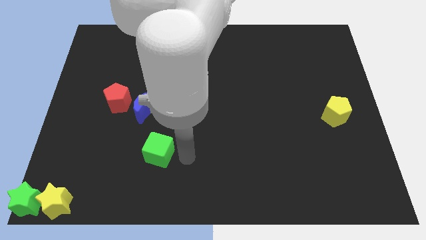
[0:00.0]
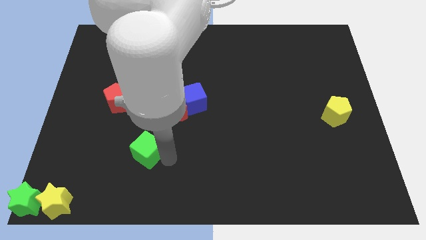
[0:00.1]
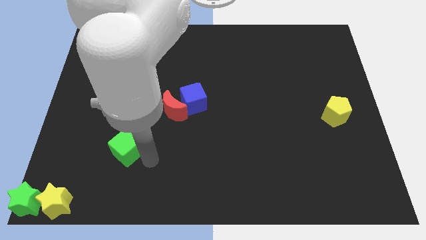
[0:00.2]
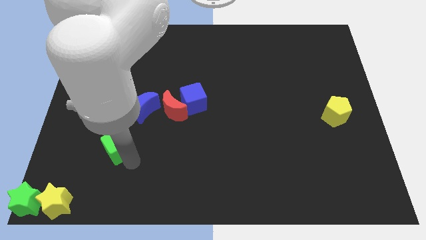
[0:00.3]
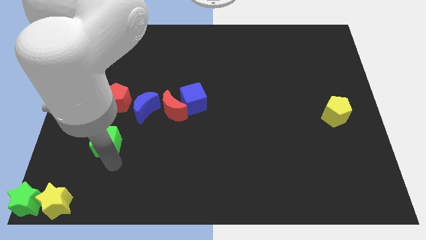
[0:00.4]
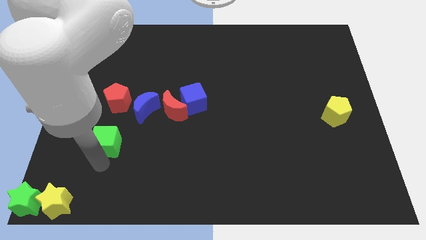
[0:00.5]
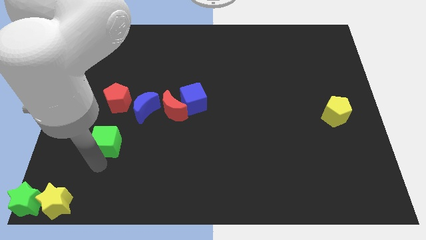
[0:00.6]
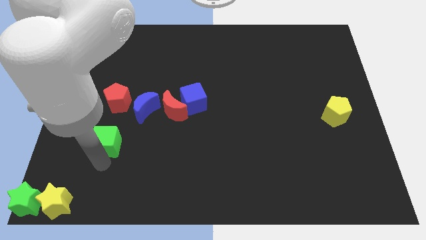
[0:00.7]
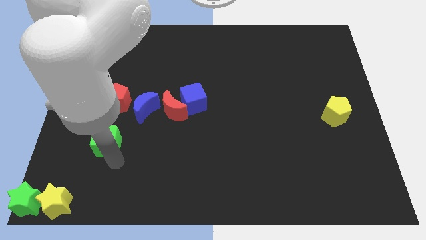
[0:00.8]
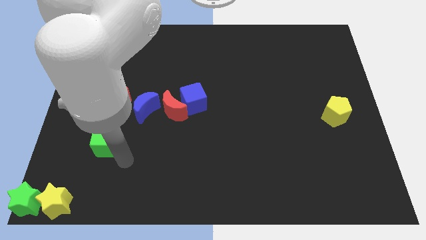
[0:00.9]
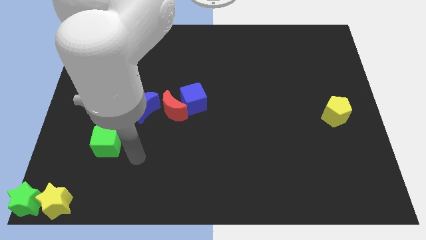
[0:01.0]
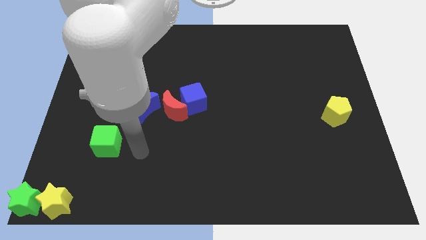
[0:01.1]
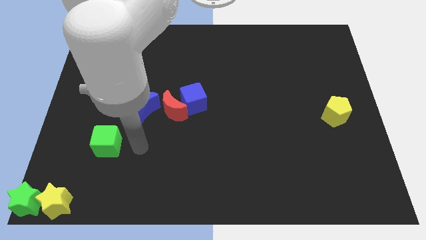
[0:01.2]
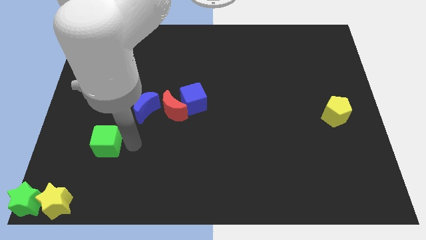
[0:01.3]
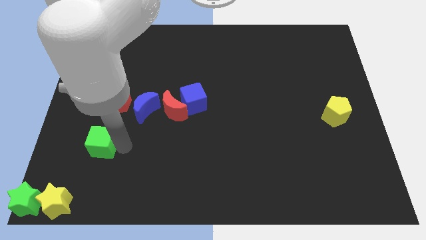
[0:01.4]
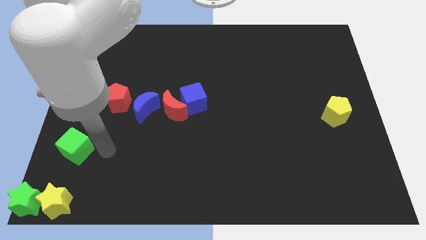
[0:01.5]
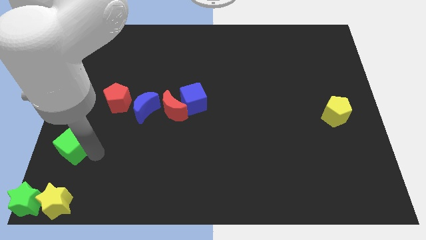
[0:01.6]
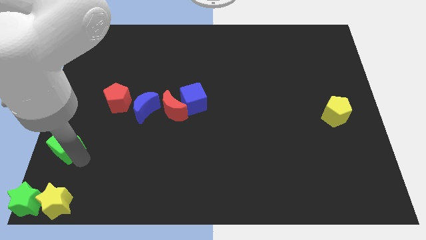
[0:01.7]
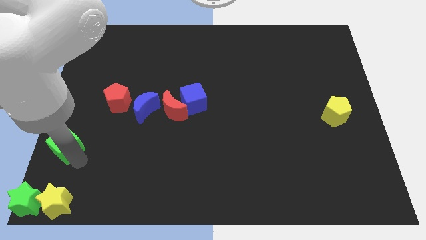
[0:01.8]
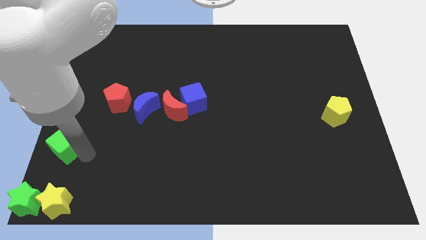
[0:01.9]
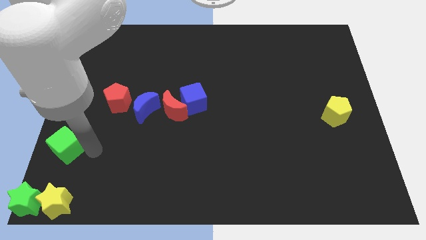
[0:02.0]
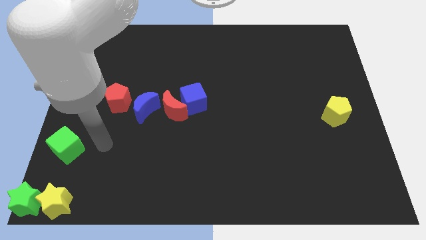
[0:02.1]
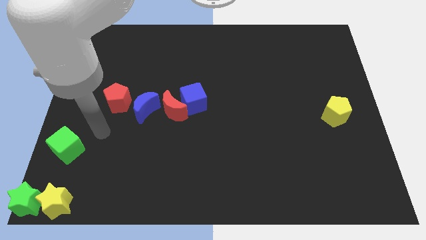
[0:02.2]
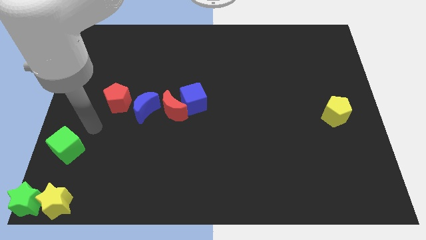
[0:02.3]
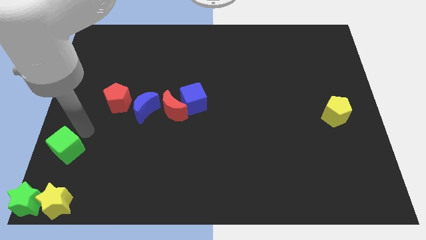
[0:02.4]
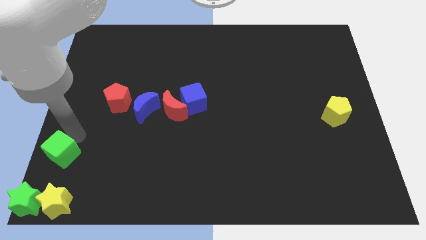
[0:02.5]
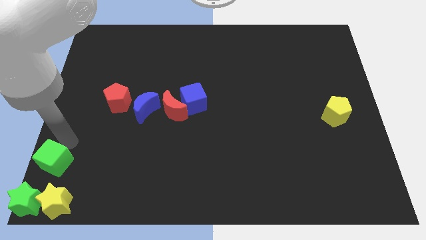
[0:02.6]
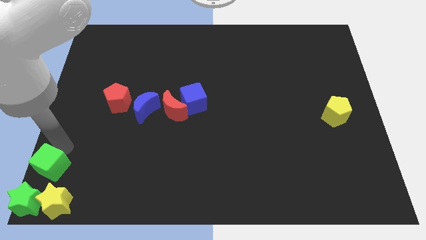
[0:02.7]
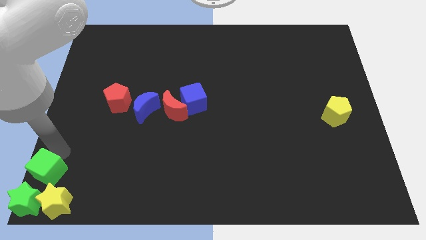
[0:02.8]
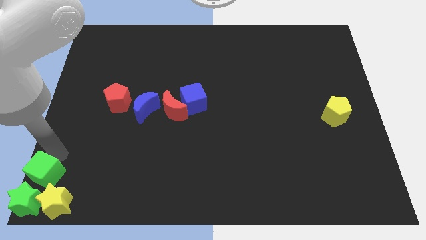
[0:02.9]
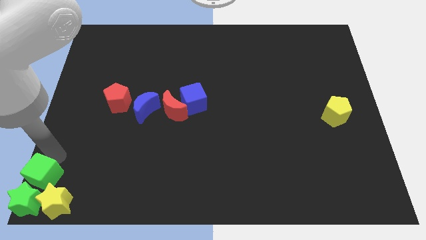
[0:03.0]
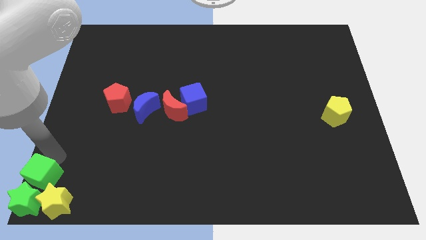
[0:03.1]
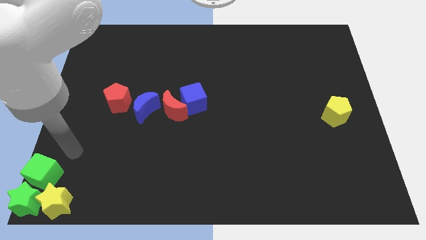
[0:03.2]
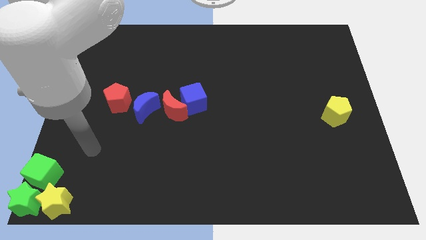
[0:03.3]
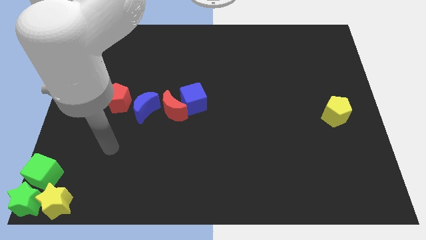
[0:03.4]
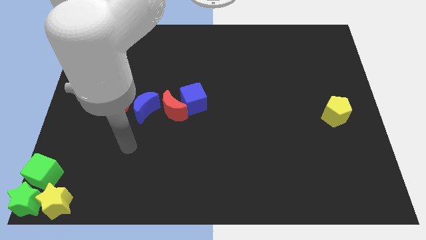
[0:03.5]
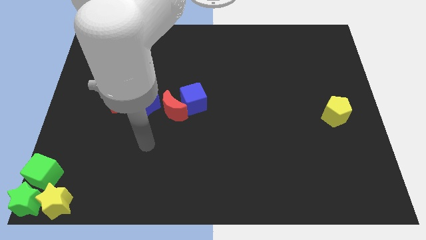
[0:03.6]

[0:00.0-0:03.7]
place the green cube above the green star

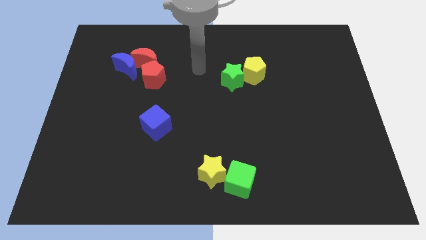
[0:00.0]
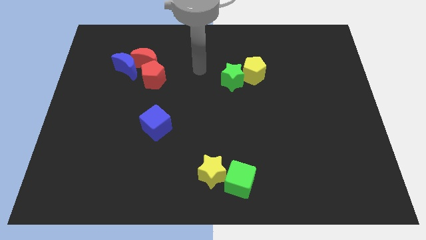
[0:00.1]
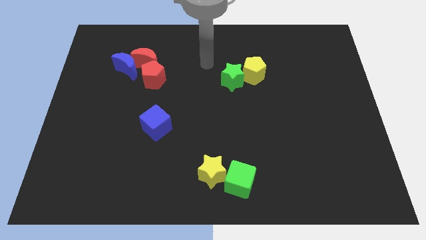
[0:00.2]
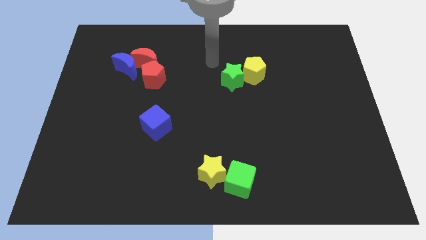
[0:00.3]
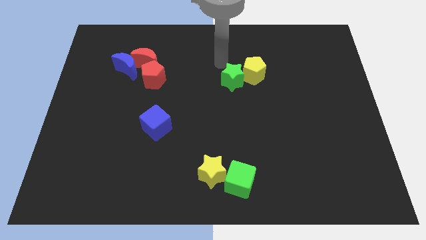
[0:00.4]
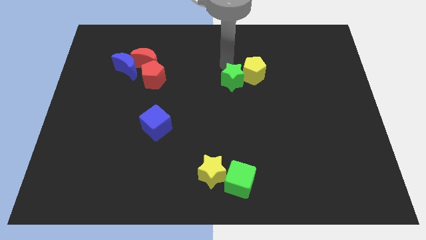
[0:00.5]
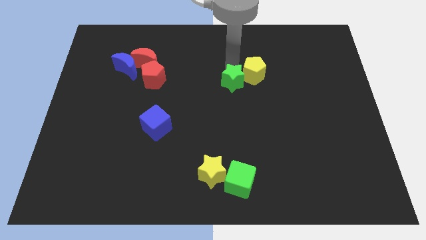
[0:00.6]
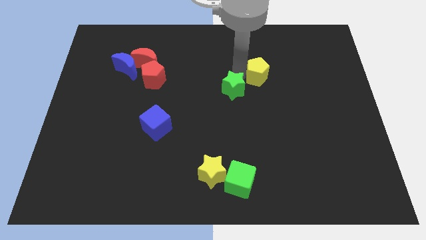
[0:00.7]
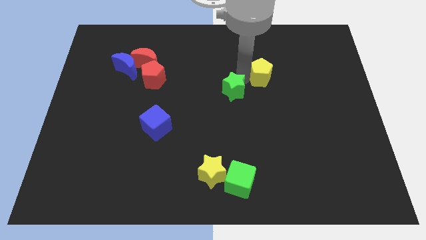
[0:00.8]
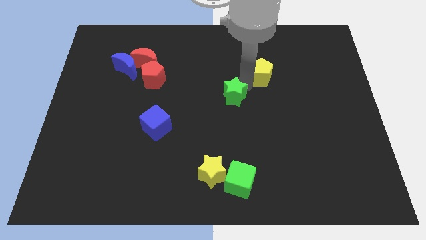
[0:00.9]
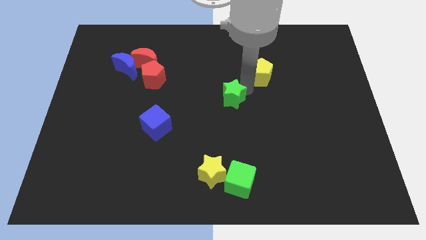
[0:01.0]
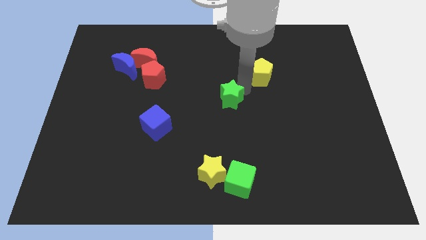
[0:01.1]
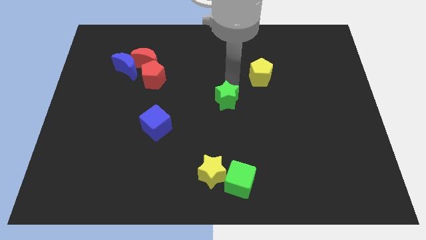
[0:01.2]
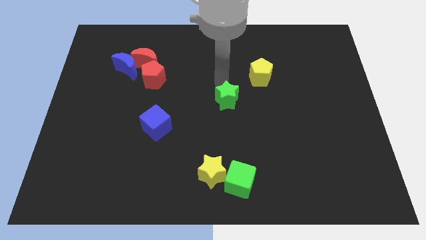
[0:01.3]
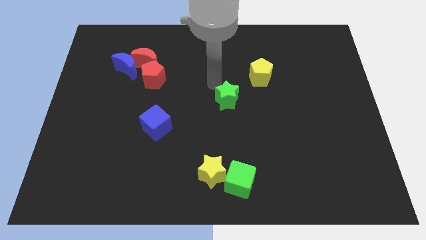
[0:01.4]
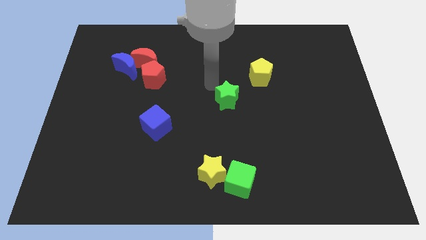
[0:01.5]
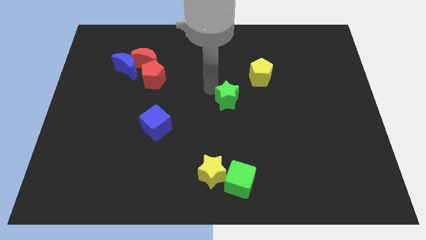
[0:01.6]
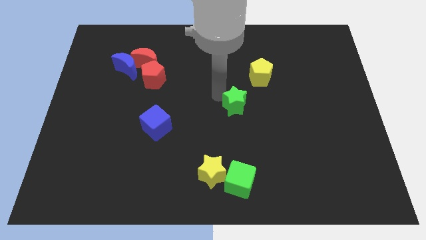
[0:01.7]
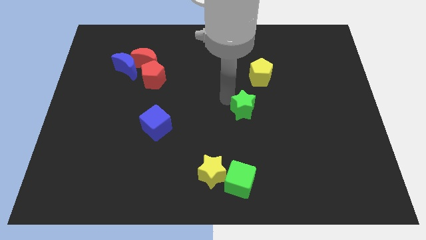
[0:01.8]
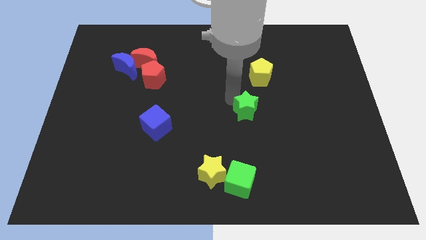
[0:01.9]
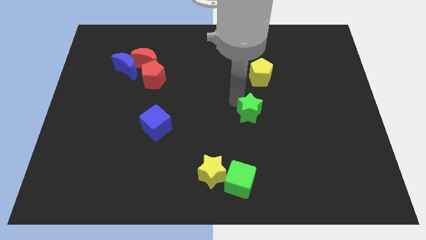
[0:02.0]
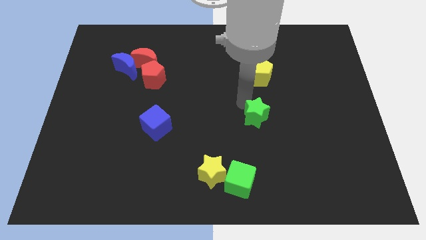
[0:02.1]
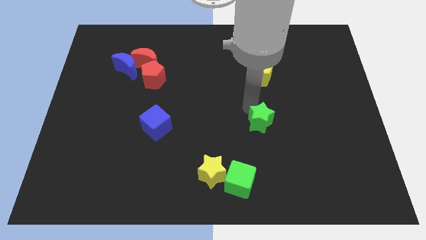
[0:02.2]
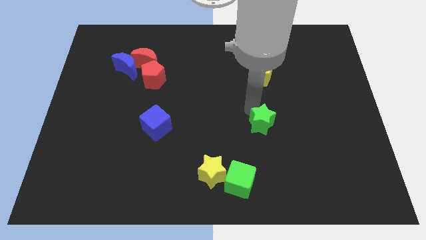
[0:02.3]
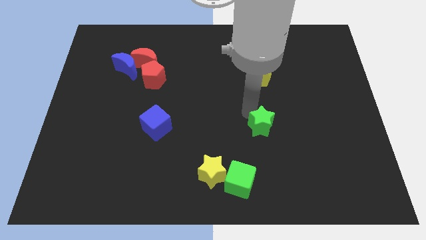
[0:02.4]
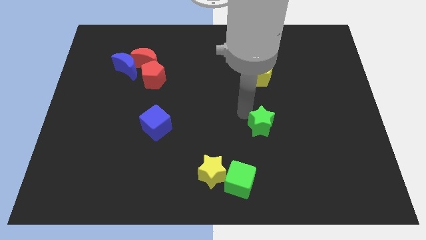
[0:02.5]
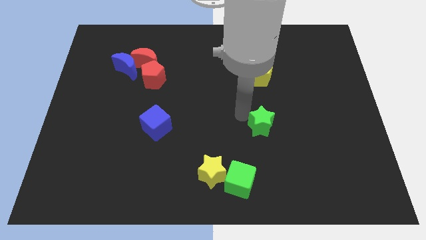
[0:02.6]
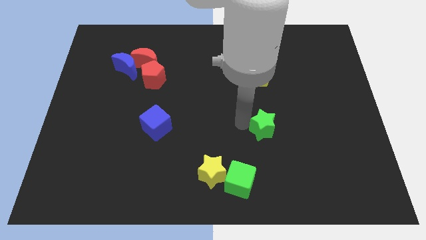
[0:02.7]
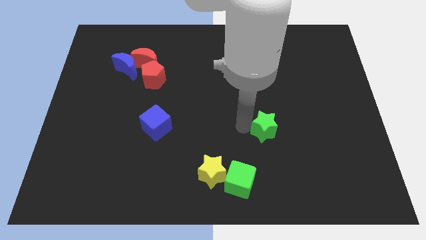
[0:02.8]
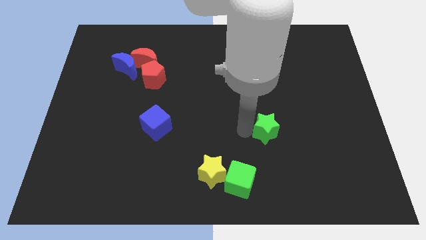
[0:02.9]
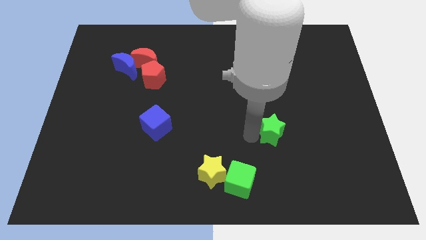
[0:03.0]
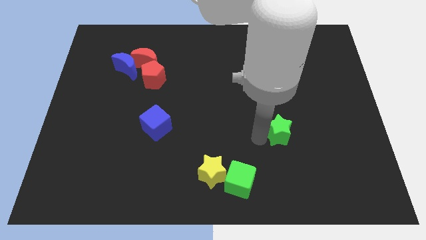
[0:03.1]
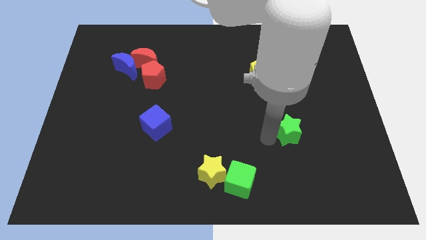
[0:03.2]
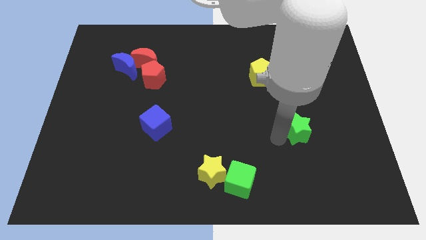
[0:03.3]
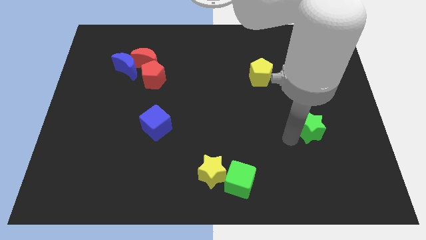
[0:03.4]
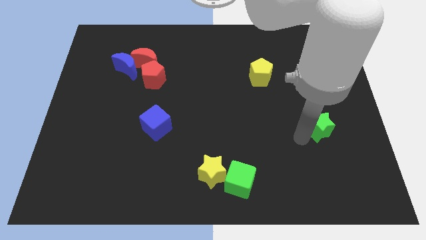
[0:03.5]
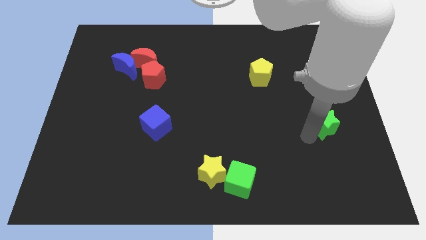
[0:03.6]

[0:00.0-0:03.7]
move the green star diagonal to the yellow pentagon

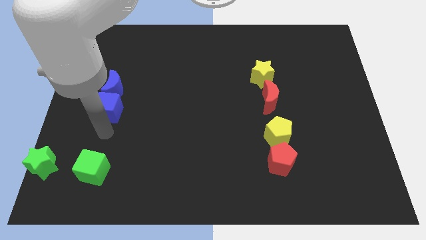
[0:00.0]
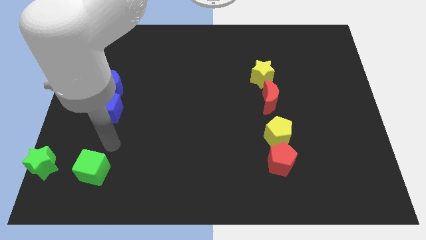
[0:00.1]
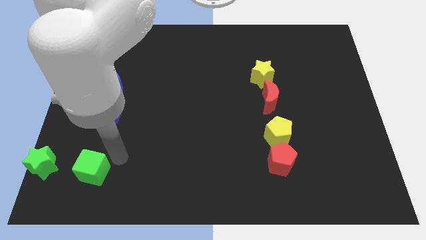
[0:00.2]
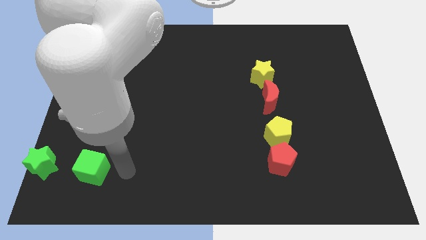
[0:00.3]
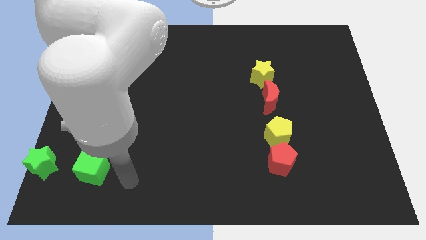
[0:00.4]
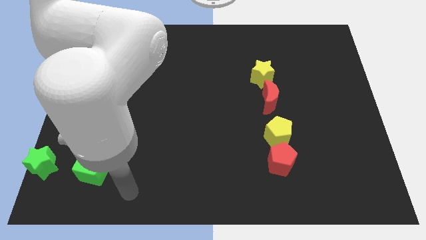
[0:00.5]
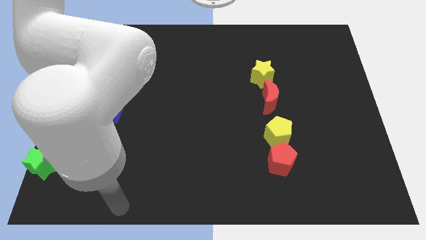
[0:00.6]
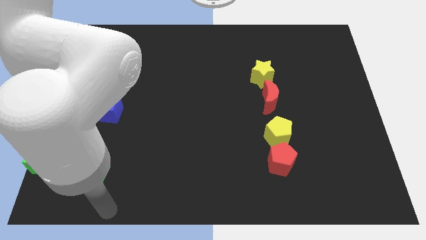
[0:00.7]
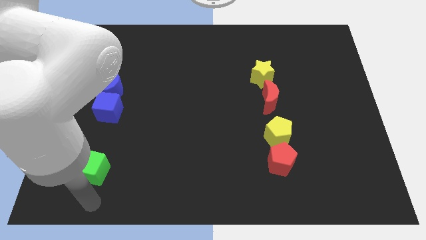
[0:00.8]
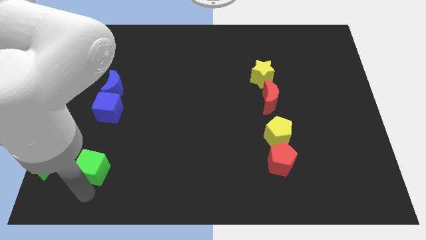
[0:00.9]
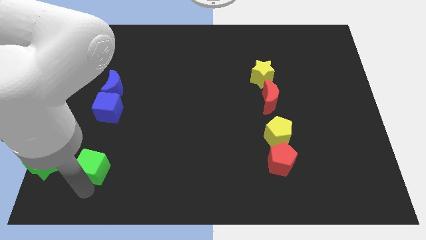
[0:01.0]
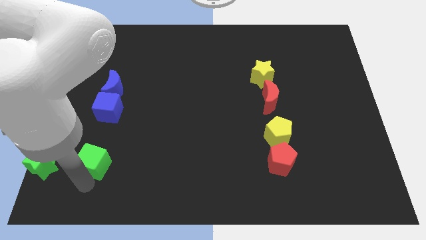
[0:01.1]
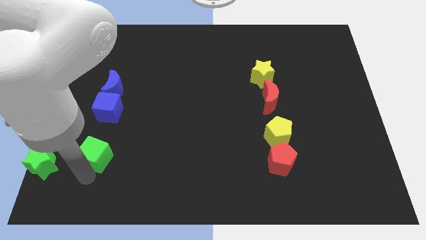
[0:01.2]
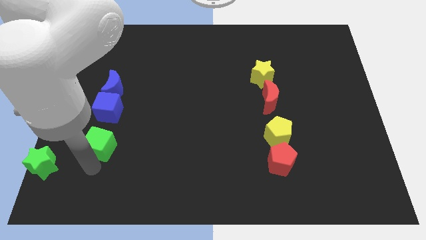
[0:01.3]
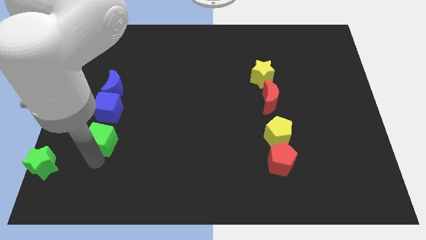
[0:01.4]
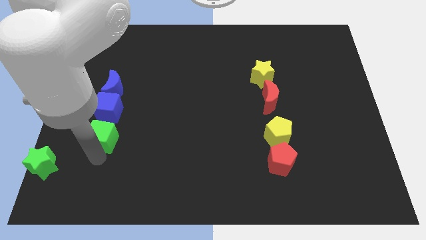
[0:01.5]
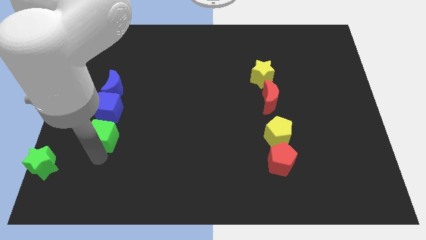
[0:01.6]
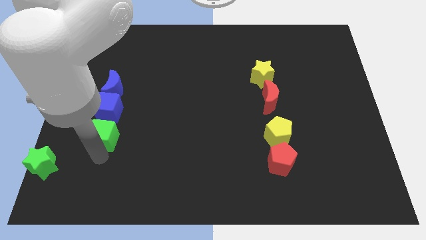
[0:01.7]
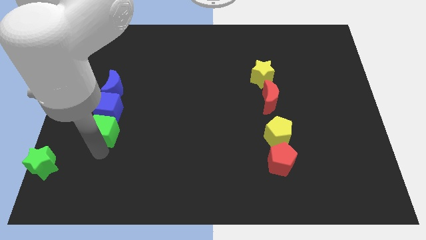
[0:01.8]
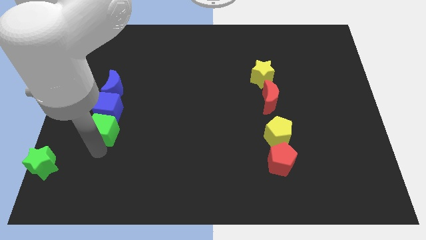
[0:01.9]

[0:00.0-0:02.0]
slide the green cube to the bottom of the blue cube
